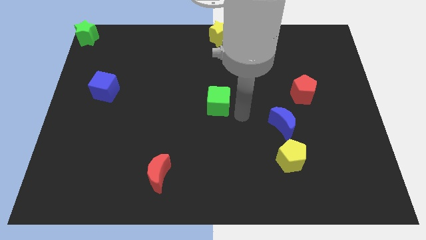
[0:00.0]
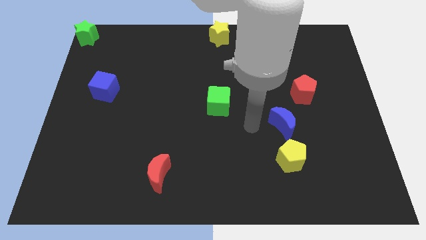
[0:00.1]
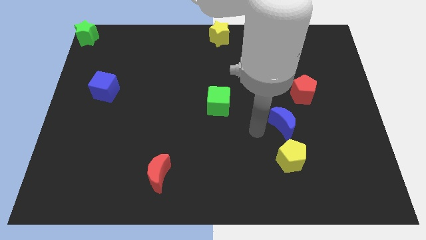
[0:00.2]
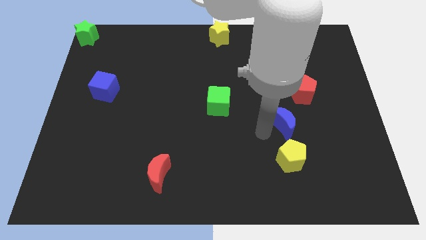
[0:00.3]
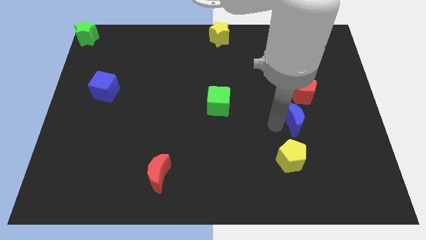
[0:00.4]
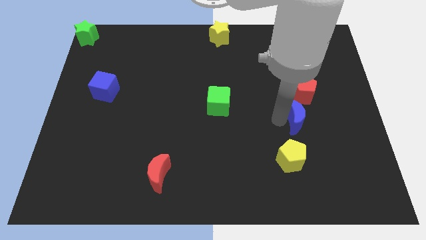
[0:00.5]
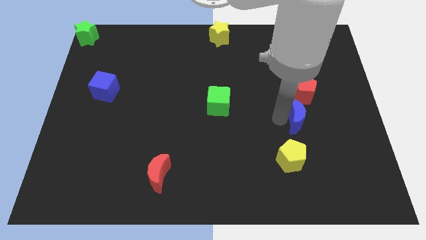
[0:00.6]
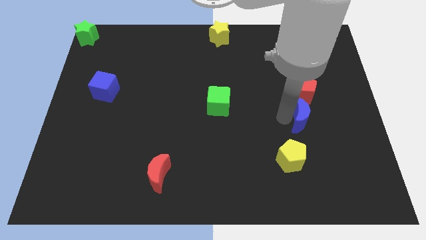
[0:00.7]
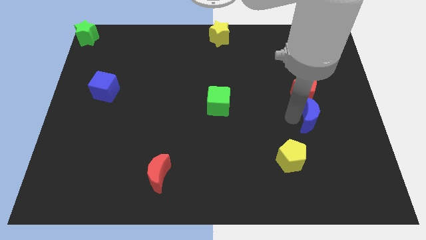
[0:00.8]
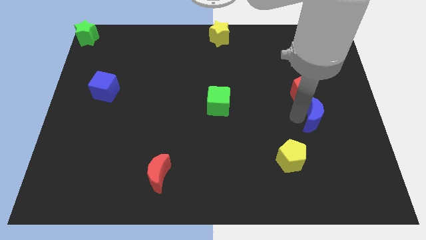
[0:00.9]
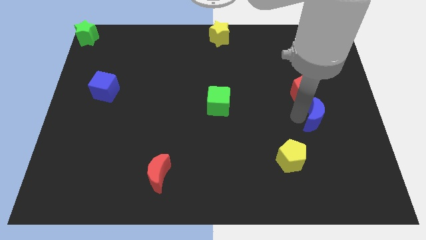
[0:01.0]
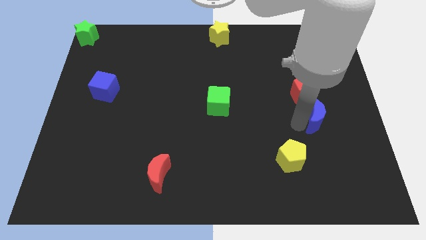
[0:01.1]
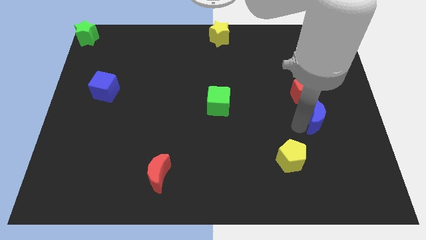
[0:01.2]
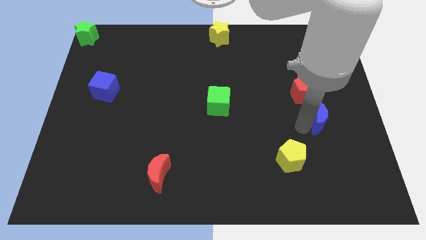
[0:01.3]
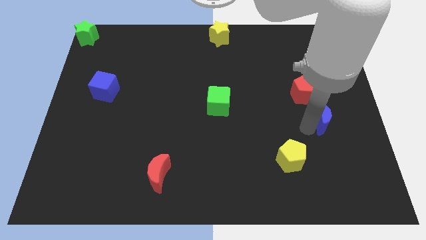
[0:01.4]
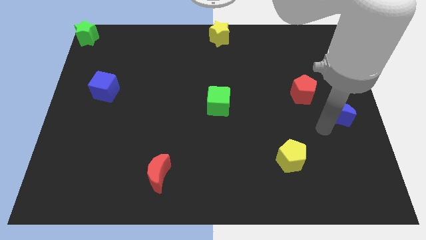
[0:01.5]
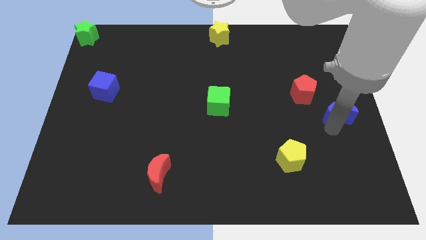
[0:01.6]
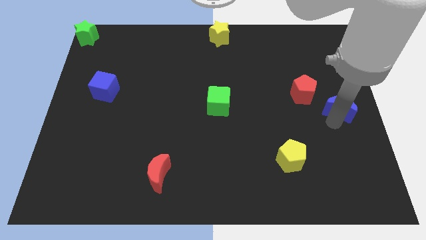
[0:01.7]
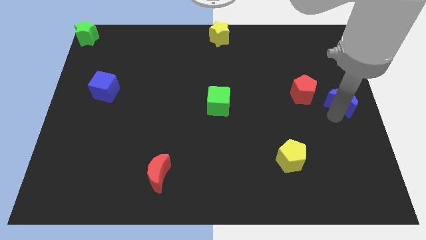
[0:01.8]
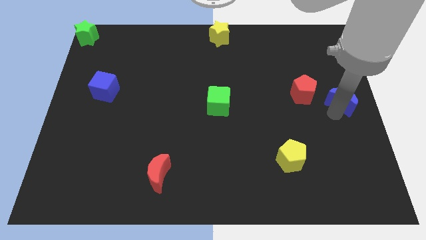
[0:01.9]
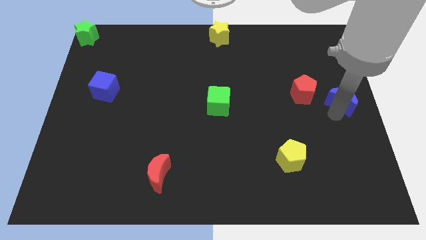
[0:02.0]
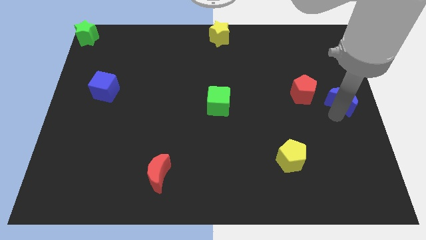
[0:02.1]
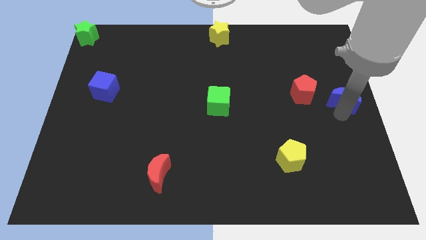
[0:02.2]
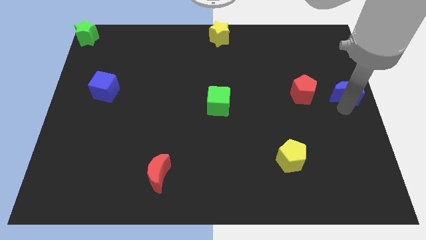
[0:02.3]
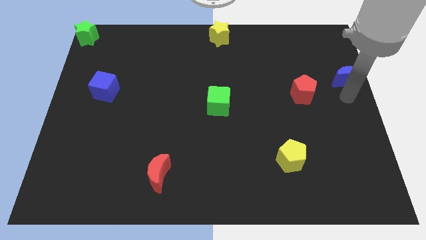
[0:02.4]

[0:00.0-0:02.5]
put the blue moon right to the red pentagon

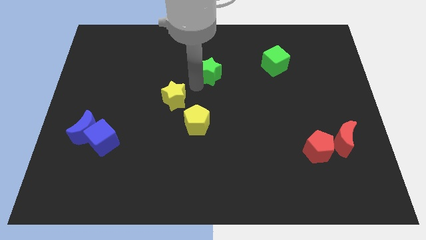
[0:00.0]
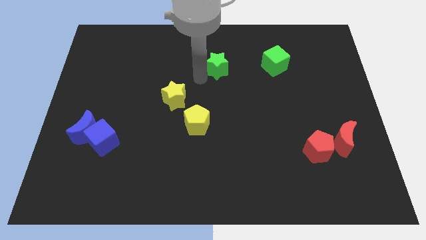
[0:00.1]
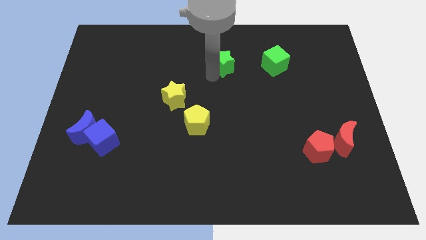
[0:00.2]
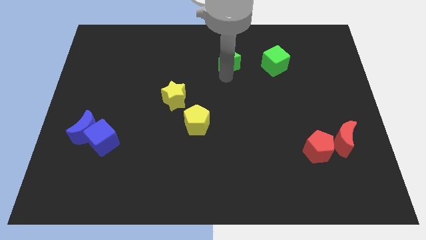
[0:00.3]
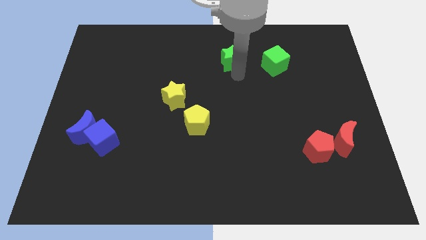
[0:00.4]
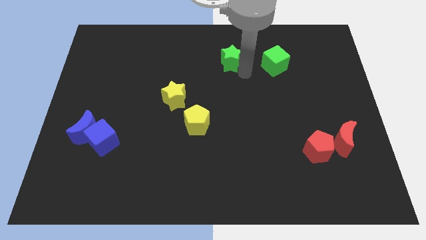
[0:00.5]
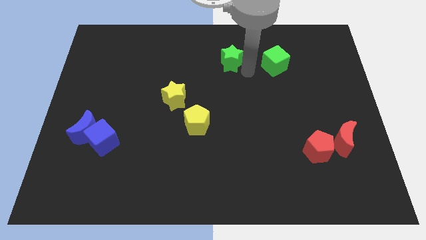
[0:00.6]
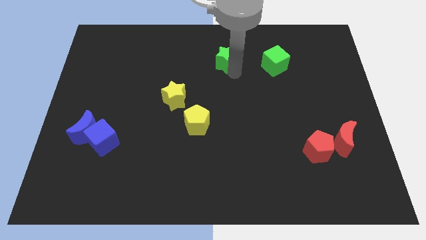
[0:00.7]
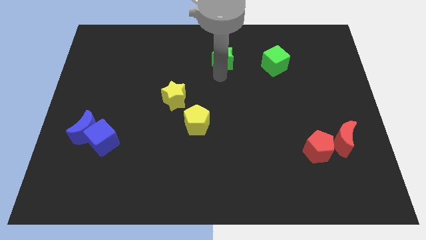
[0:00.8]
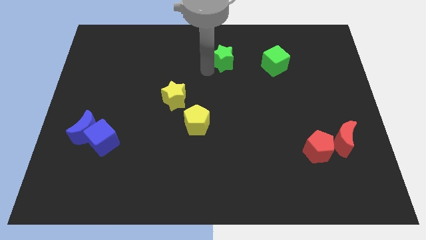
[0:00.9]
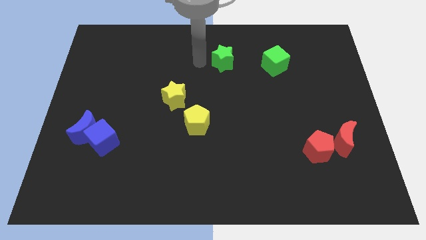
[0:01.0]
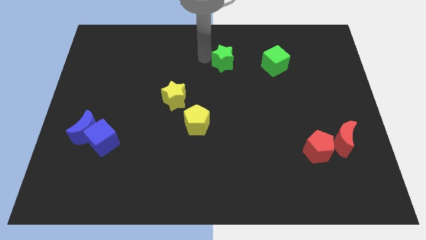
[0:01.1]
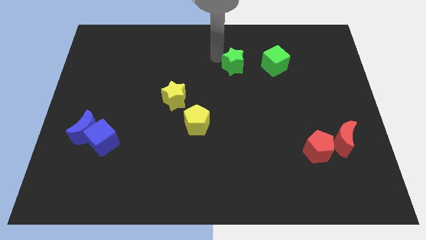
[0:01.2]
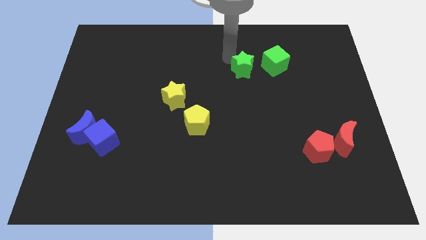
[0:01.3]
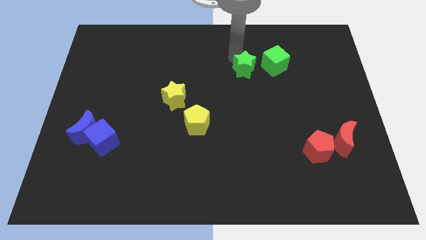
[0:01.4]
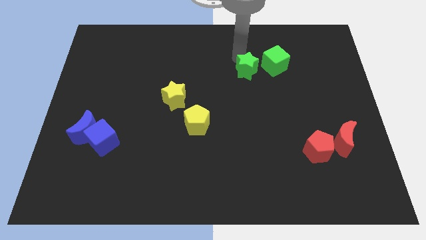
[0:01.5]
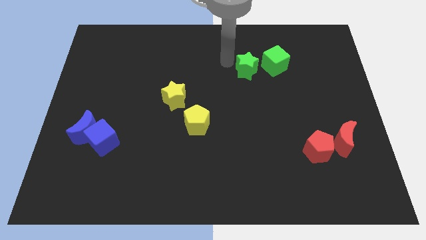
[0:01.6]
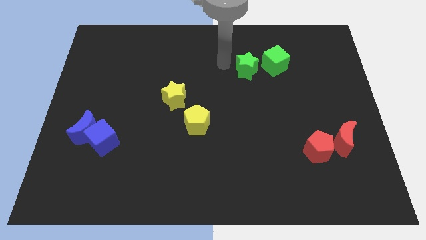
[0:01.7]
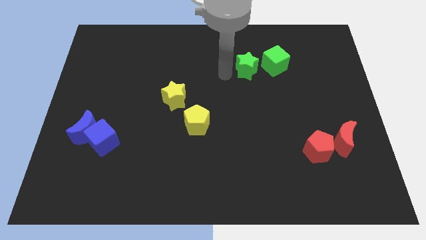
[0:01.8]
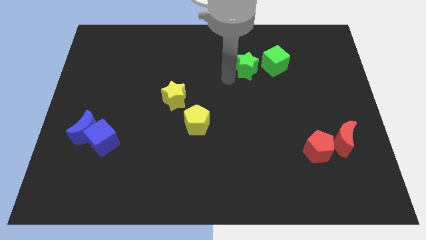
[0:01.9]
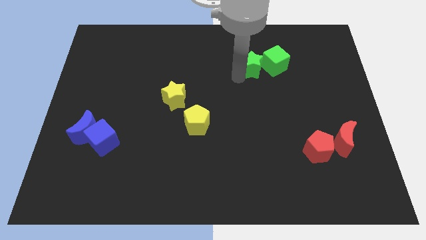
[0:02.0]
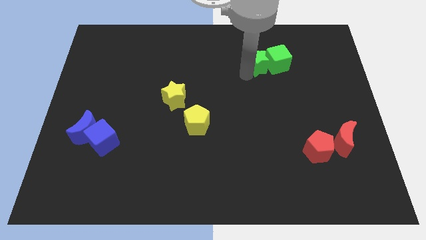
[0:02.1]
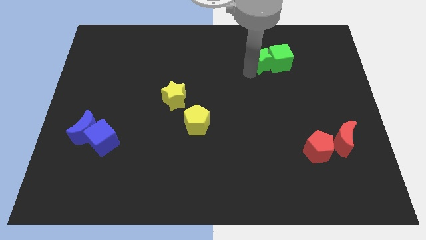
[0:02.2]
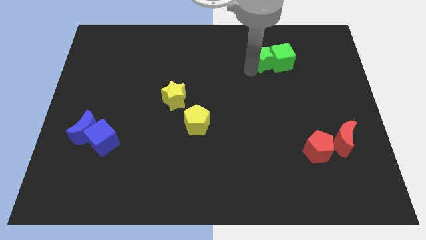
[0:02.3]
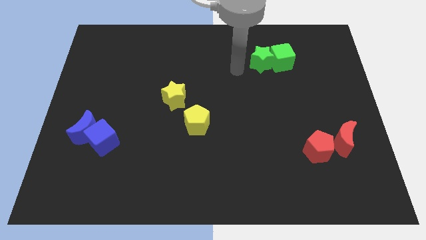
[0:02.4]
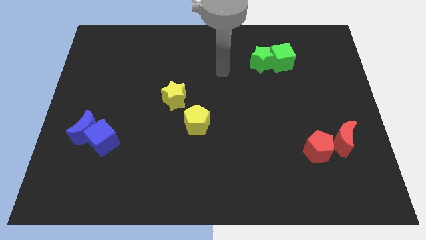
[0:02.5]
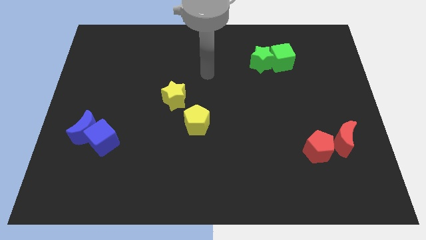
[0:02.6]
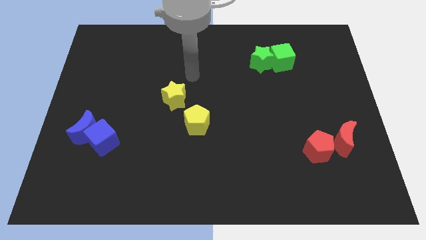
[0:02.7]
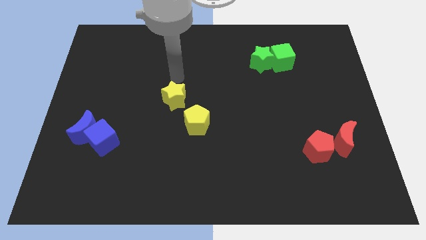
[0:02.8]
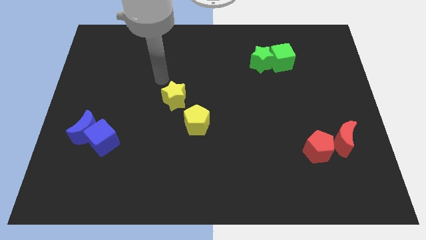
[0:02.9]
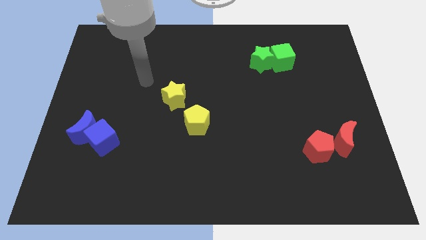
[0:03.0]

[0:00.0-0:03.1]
push green star into green cube

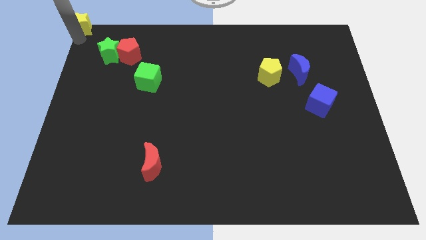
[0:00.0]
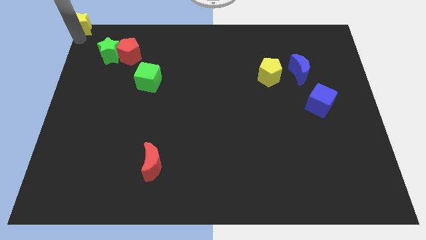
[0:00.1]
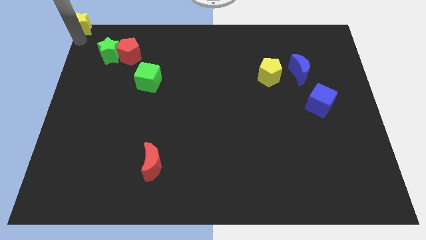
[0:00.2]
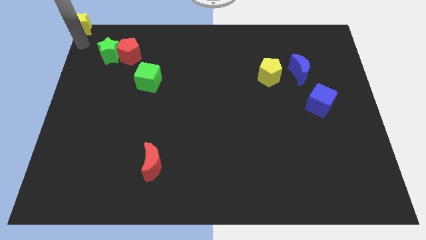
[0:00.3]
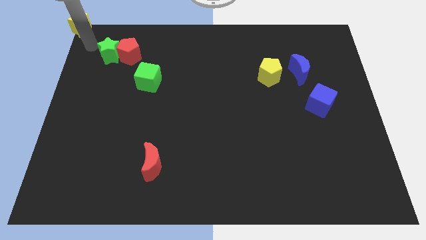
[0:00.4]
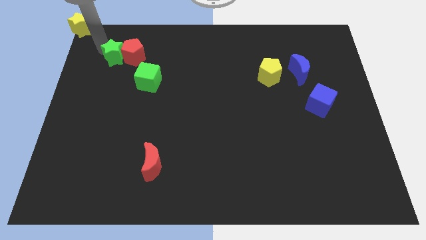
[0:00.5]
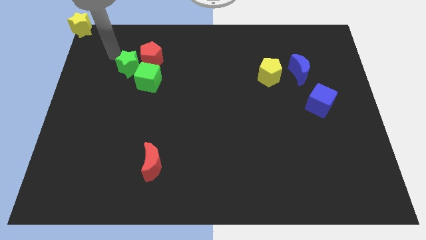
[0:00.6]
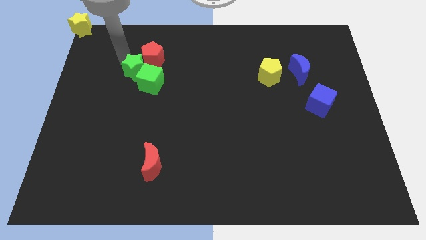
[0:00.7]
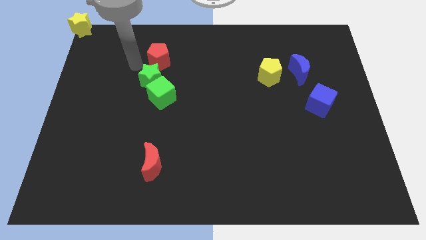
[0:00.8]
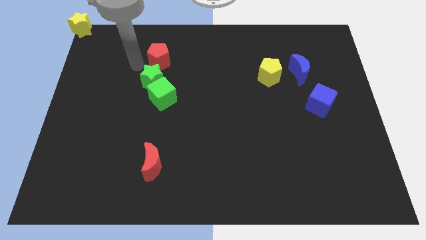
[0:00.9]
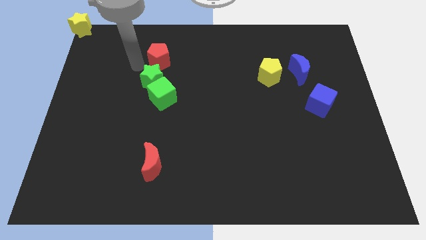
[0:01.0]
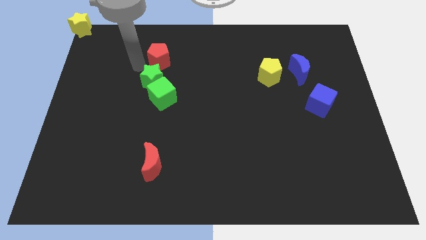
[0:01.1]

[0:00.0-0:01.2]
push the green star into the green cube

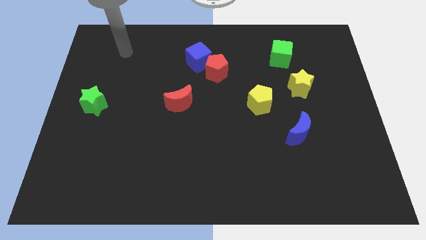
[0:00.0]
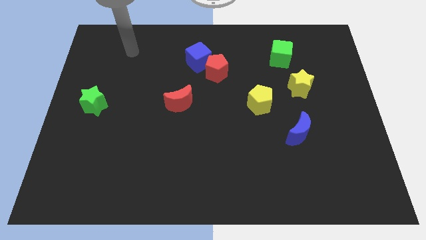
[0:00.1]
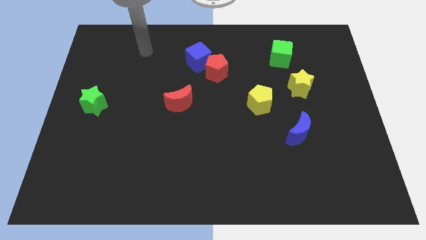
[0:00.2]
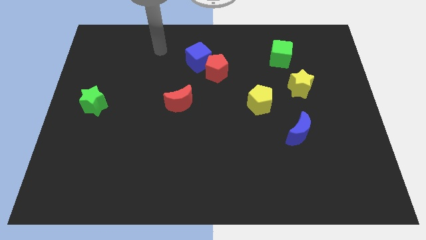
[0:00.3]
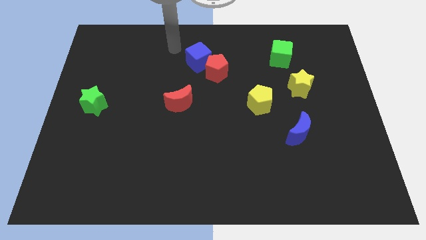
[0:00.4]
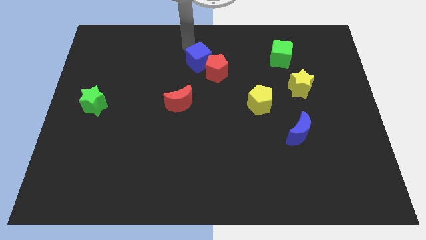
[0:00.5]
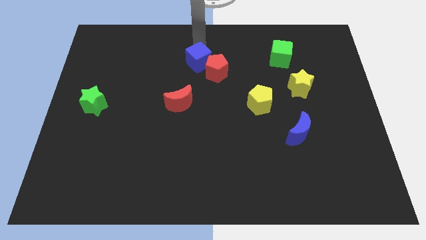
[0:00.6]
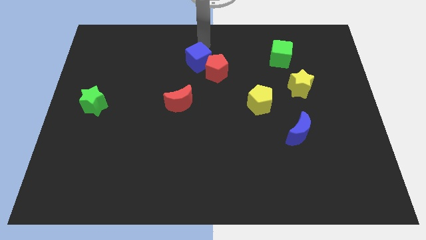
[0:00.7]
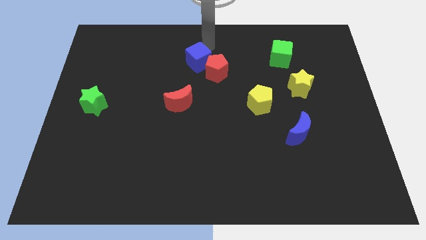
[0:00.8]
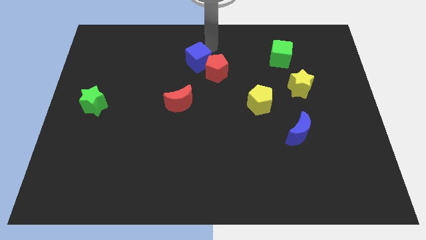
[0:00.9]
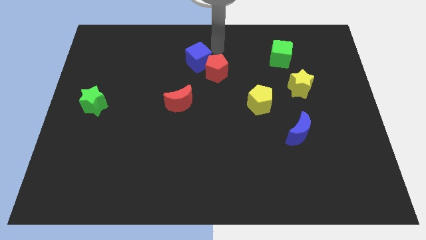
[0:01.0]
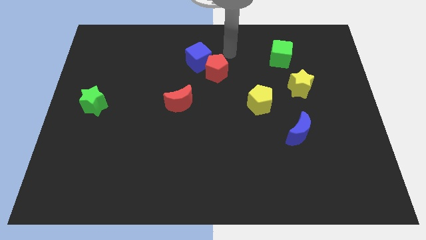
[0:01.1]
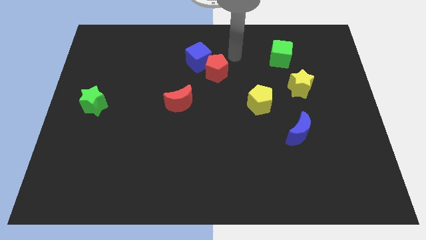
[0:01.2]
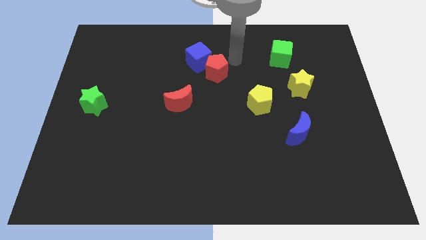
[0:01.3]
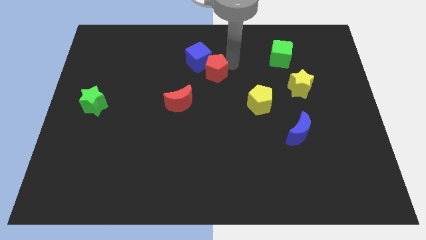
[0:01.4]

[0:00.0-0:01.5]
move your arm to the top right of the red pentagon

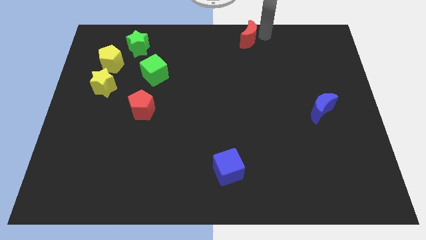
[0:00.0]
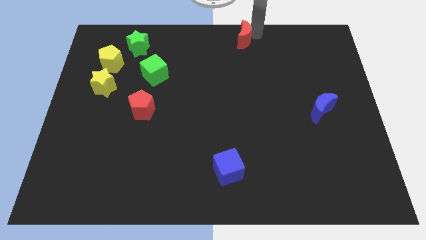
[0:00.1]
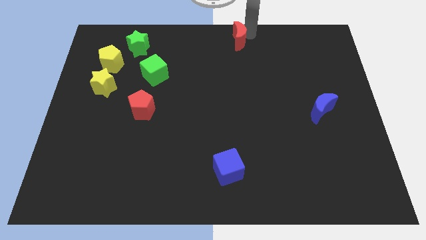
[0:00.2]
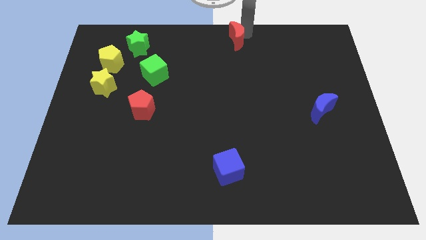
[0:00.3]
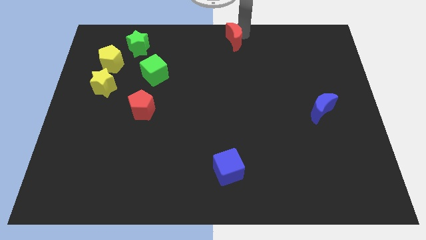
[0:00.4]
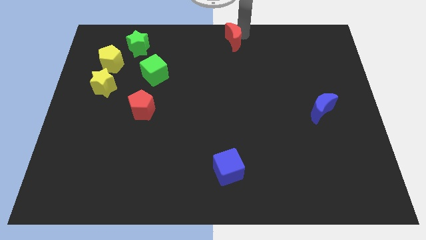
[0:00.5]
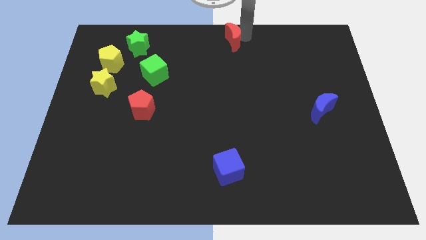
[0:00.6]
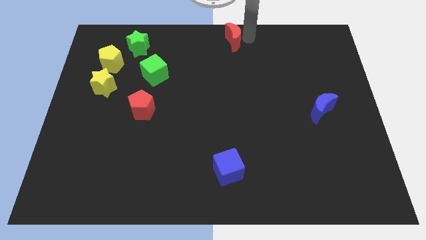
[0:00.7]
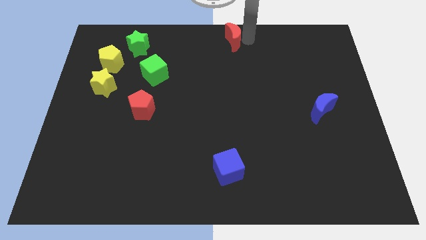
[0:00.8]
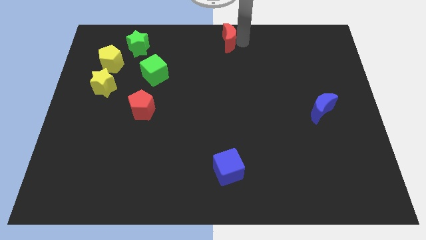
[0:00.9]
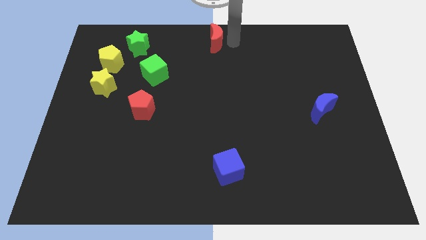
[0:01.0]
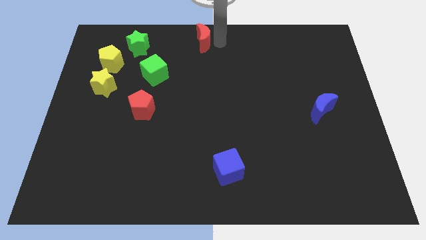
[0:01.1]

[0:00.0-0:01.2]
place the red crescent on top middle center
